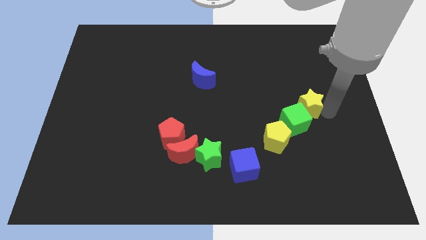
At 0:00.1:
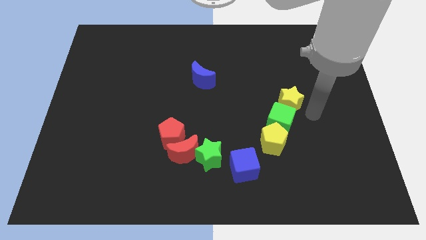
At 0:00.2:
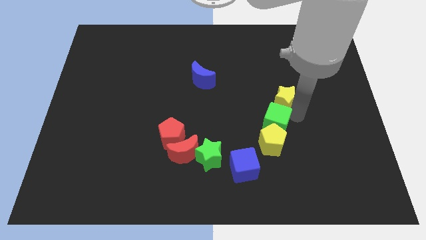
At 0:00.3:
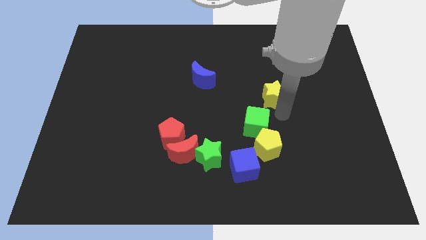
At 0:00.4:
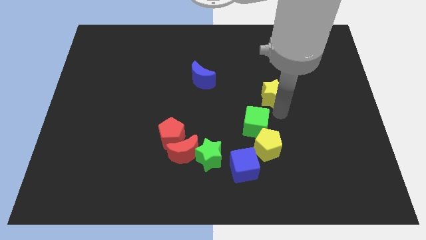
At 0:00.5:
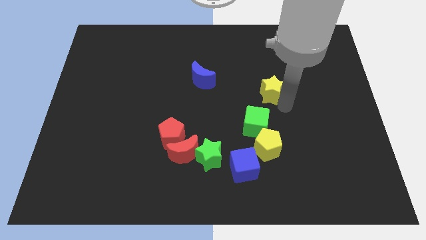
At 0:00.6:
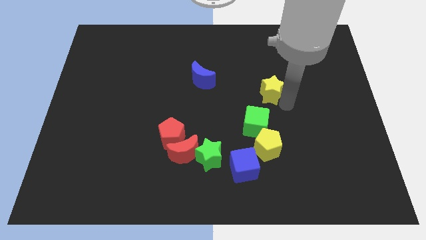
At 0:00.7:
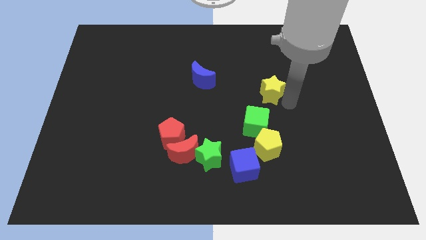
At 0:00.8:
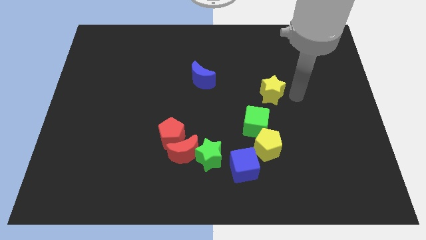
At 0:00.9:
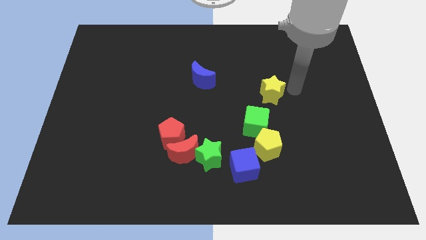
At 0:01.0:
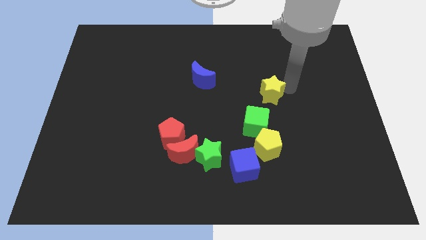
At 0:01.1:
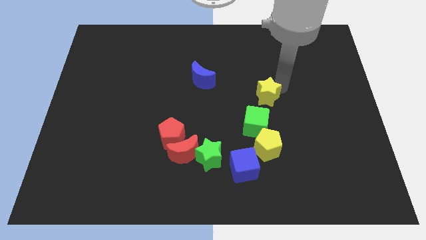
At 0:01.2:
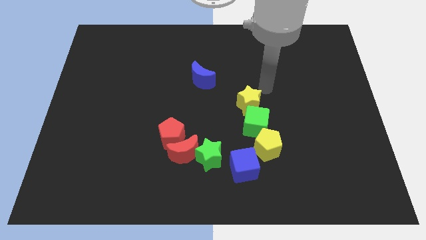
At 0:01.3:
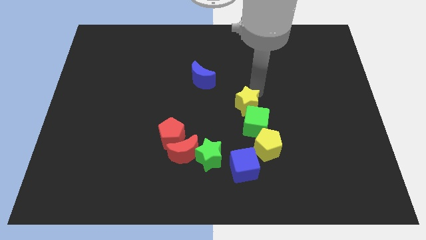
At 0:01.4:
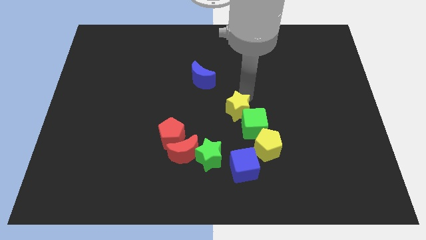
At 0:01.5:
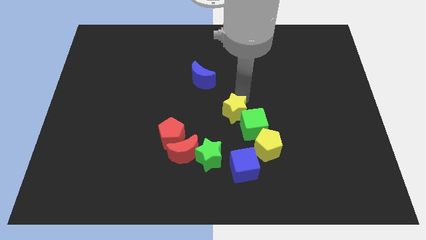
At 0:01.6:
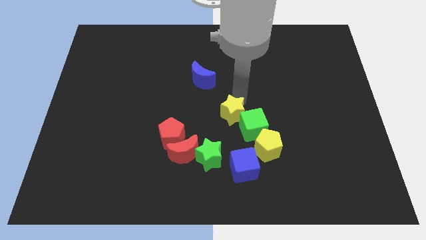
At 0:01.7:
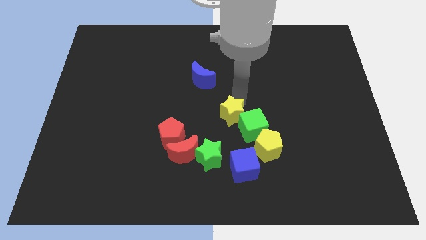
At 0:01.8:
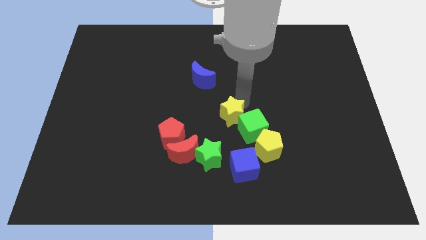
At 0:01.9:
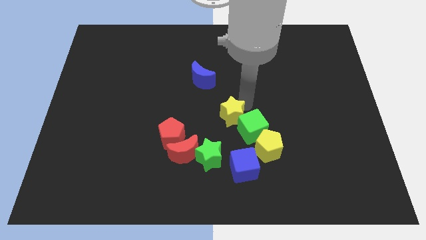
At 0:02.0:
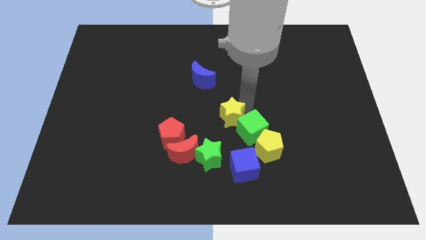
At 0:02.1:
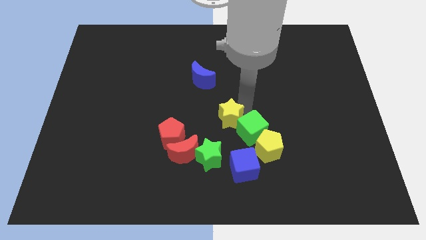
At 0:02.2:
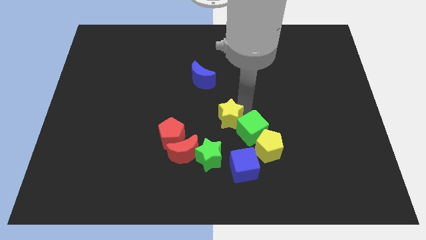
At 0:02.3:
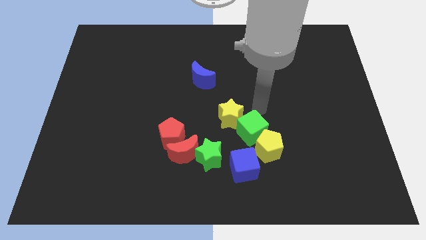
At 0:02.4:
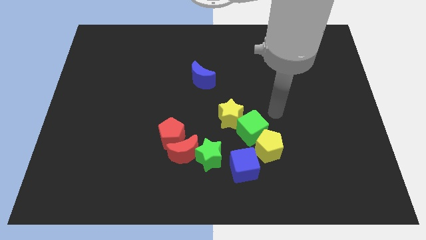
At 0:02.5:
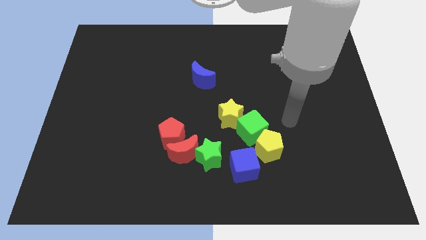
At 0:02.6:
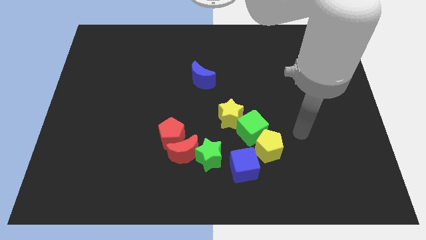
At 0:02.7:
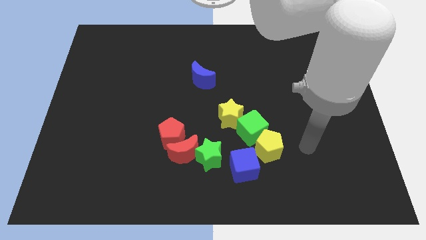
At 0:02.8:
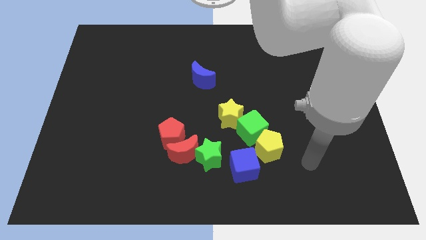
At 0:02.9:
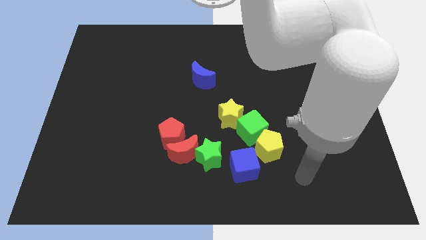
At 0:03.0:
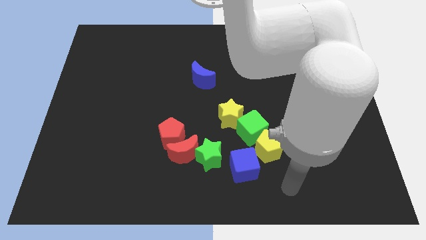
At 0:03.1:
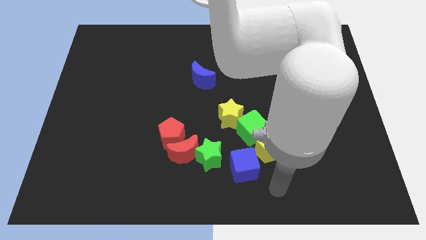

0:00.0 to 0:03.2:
push the yellow star to the center of the board

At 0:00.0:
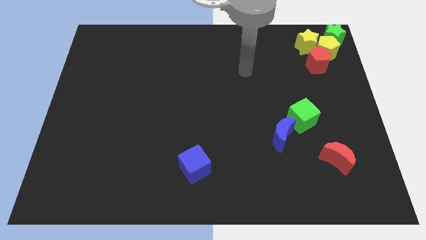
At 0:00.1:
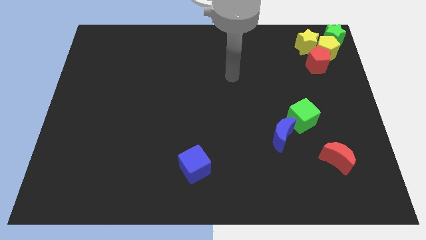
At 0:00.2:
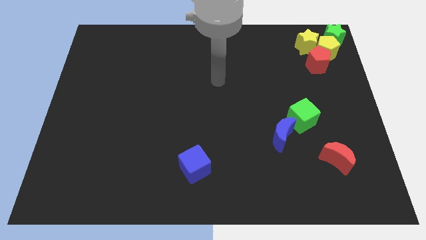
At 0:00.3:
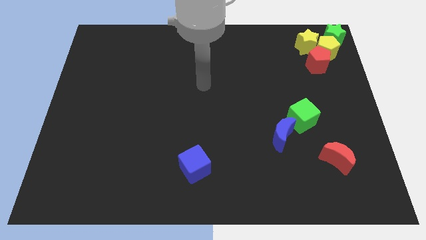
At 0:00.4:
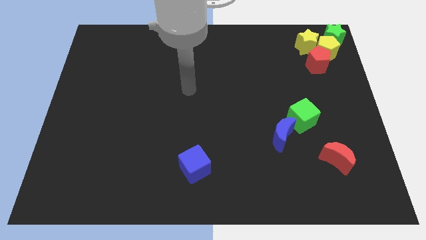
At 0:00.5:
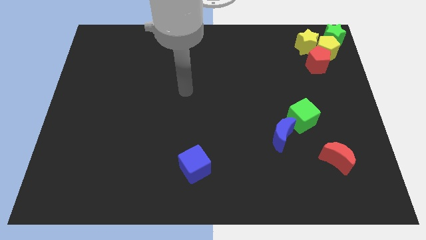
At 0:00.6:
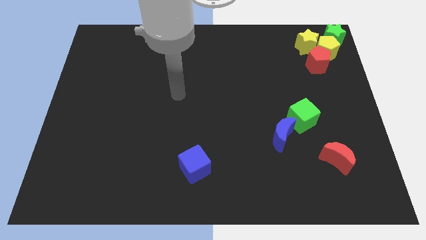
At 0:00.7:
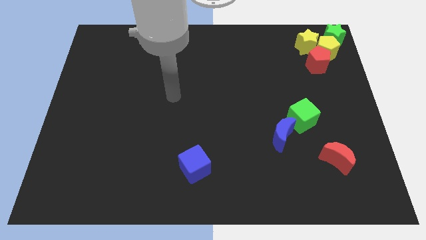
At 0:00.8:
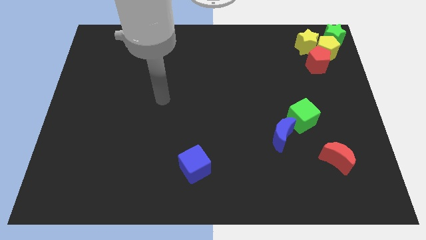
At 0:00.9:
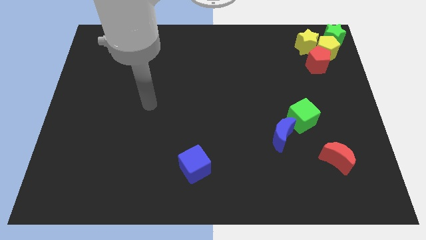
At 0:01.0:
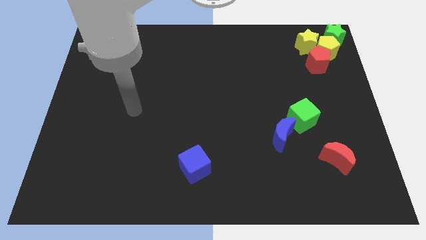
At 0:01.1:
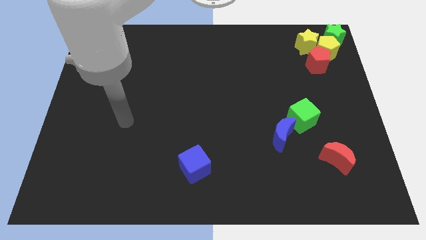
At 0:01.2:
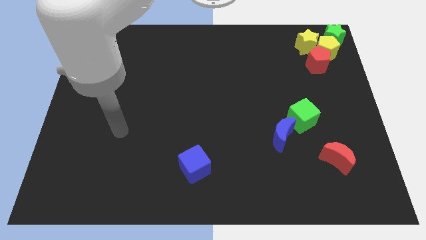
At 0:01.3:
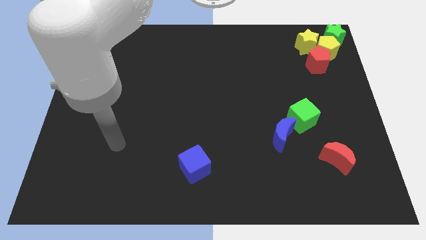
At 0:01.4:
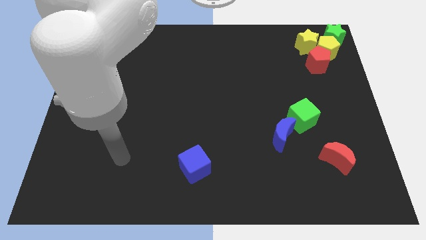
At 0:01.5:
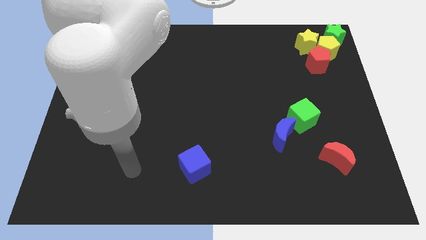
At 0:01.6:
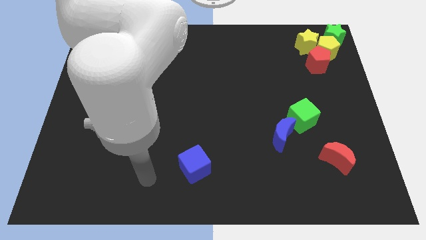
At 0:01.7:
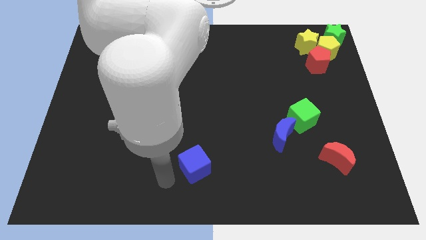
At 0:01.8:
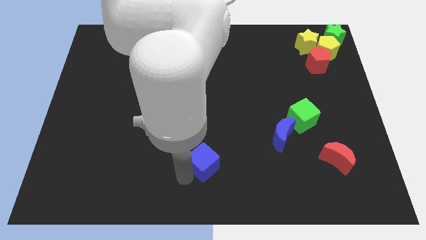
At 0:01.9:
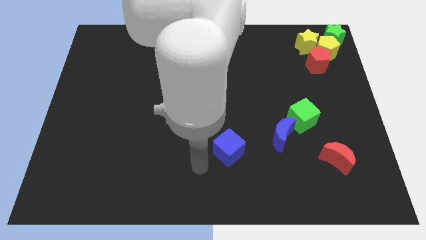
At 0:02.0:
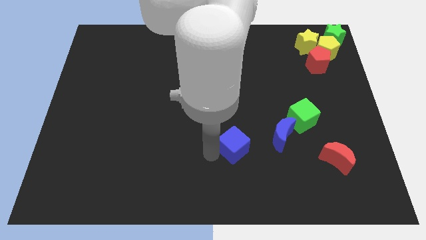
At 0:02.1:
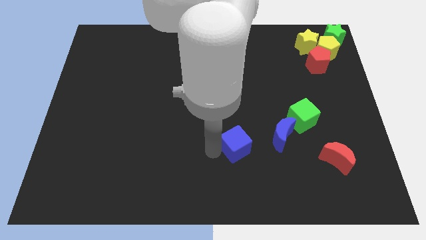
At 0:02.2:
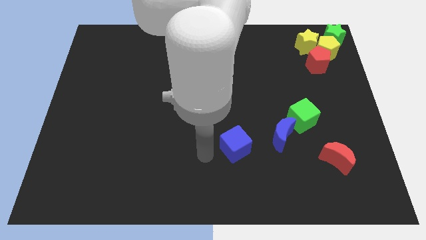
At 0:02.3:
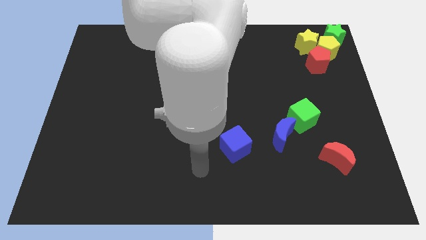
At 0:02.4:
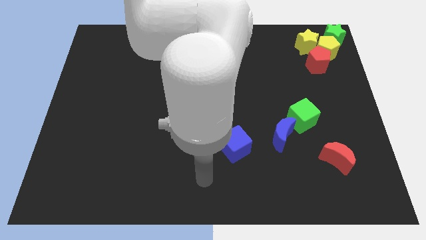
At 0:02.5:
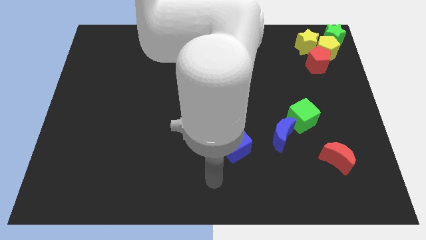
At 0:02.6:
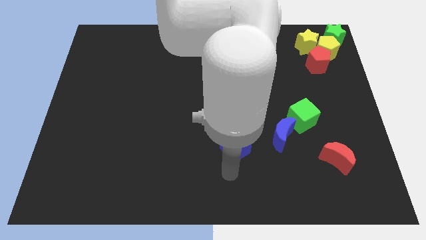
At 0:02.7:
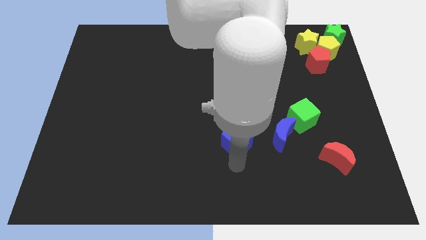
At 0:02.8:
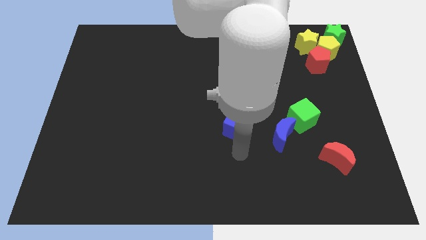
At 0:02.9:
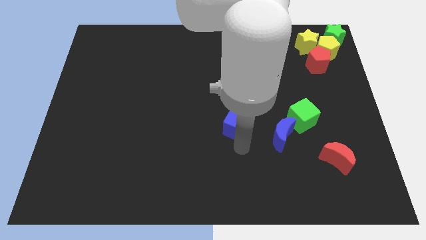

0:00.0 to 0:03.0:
place the blue cube to the left of the blue moon

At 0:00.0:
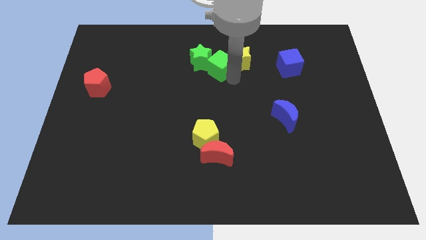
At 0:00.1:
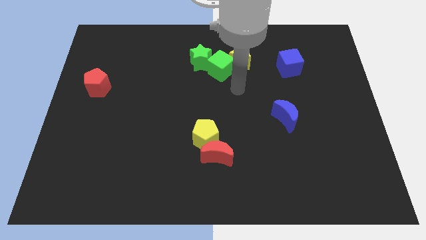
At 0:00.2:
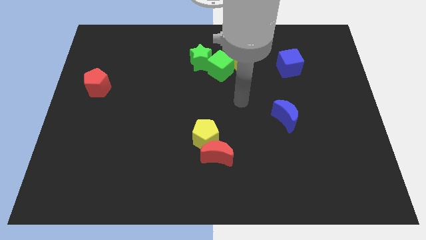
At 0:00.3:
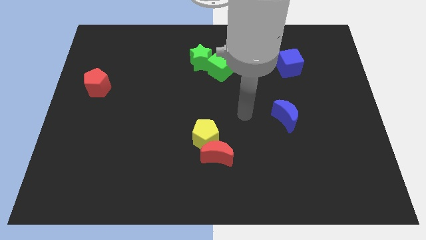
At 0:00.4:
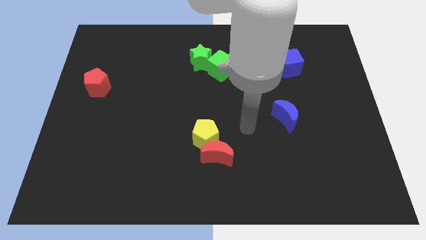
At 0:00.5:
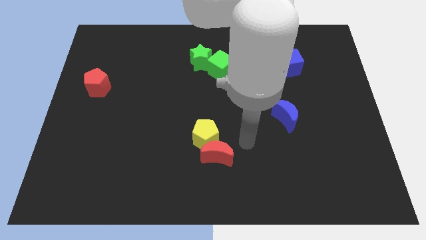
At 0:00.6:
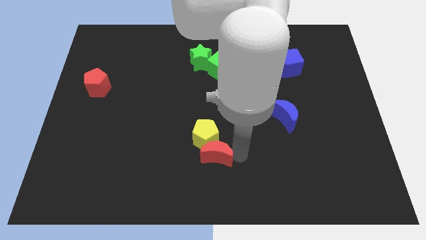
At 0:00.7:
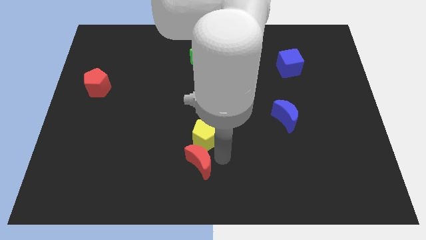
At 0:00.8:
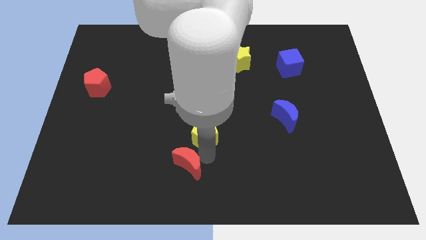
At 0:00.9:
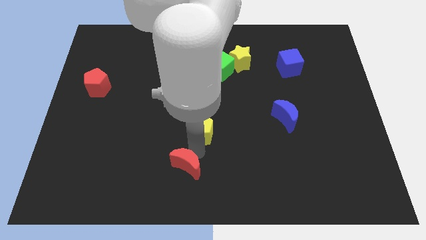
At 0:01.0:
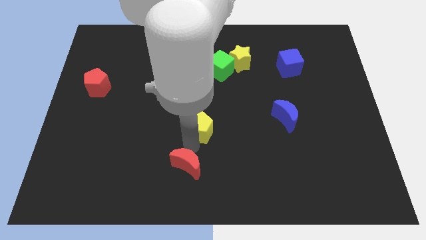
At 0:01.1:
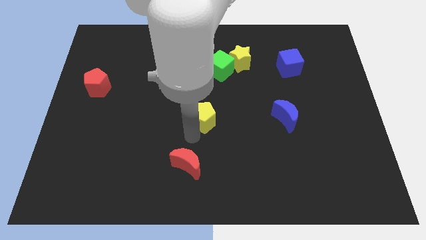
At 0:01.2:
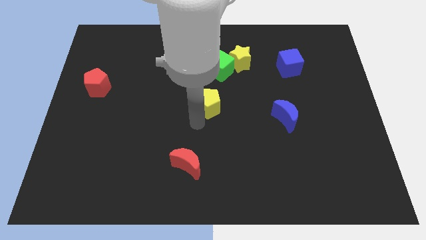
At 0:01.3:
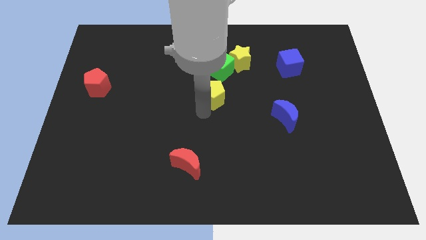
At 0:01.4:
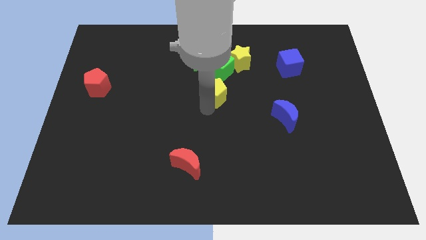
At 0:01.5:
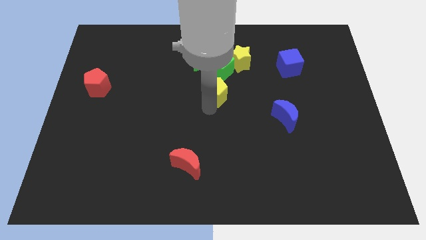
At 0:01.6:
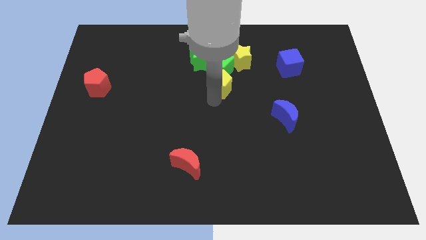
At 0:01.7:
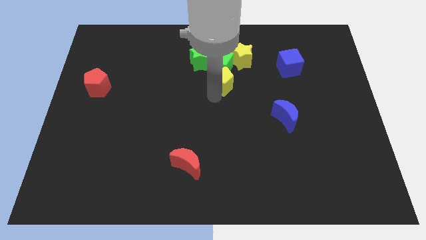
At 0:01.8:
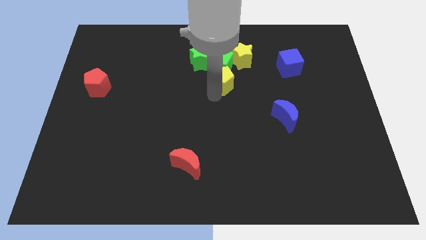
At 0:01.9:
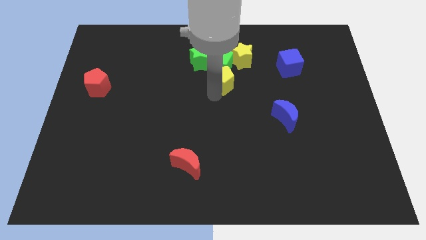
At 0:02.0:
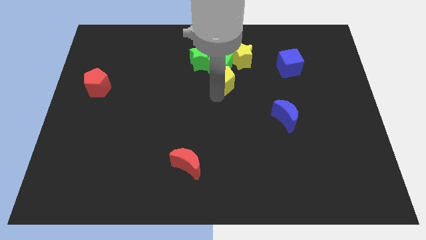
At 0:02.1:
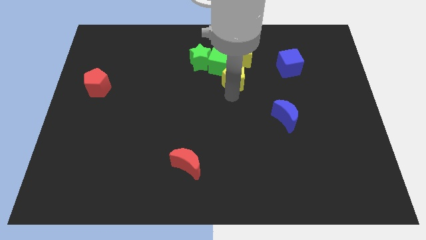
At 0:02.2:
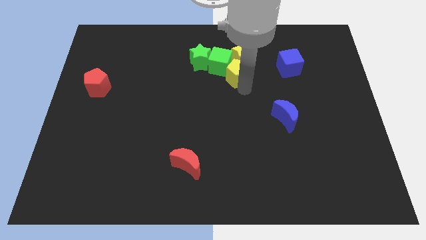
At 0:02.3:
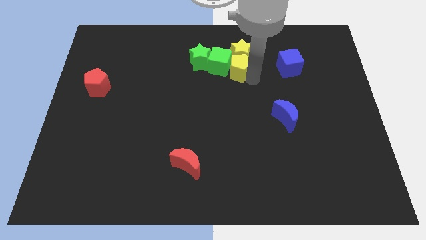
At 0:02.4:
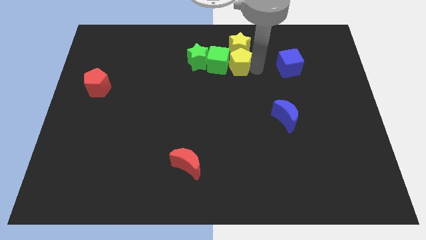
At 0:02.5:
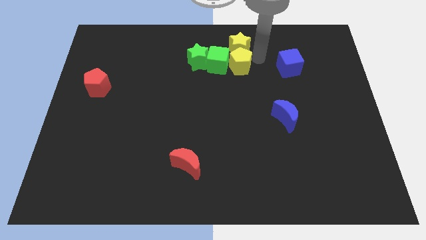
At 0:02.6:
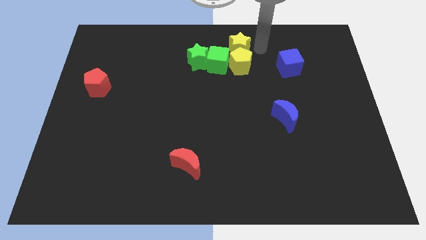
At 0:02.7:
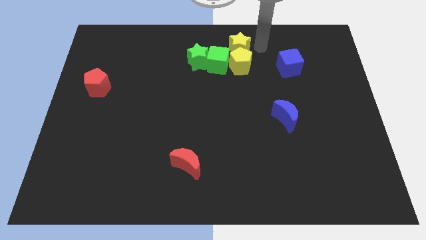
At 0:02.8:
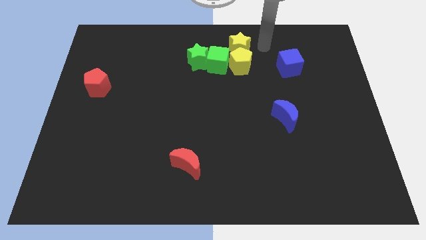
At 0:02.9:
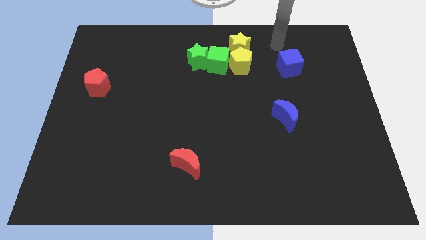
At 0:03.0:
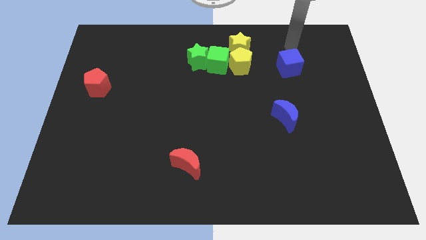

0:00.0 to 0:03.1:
push the yellow and green blocks towards the top center of the board
